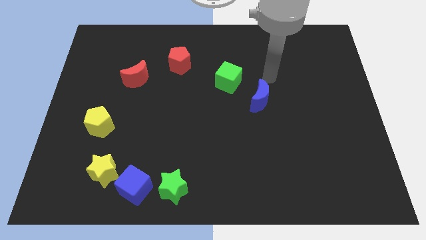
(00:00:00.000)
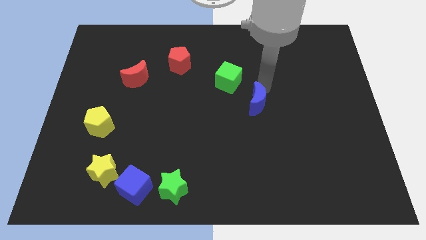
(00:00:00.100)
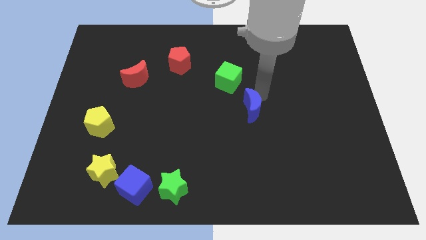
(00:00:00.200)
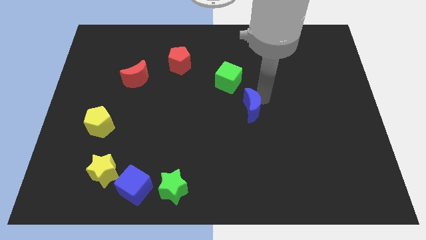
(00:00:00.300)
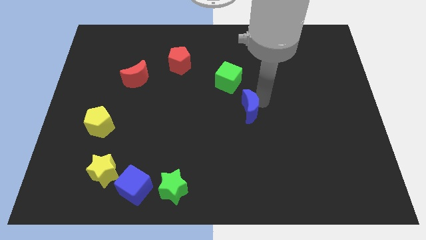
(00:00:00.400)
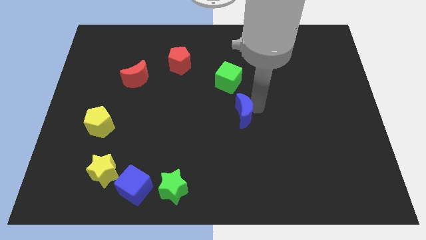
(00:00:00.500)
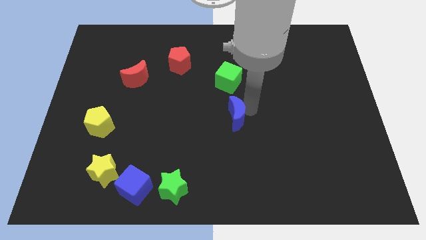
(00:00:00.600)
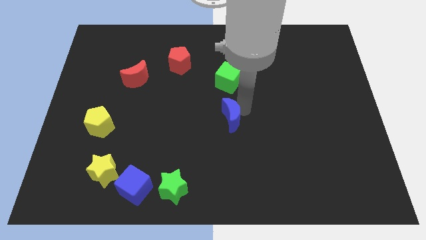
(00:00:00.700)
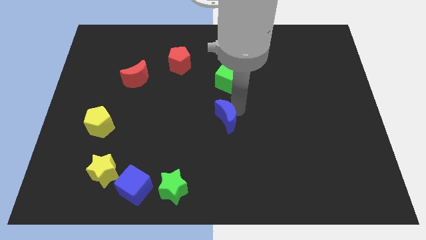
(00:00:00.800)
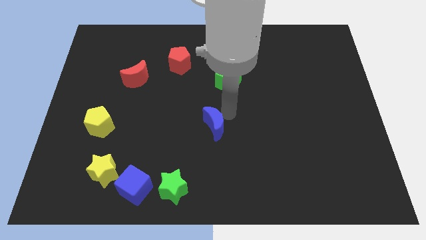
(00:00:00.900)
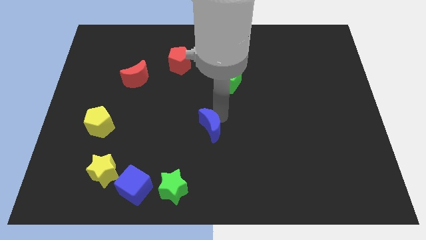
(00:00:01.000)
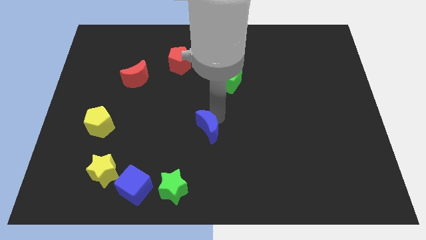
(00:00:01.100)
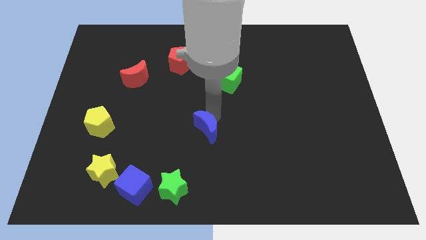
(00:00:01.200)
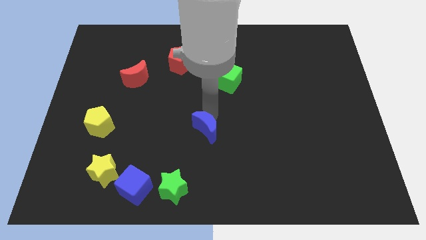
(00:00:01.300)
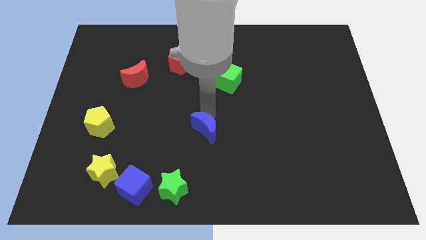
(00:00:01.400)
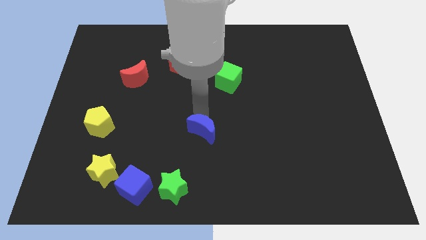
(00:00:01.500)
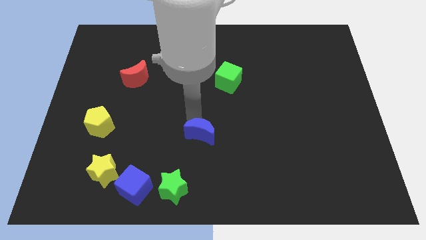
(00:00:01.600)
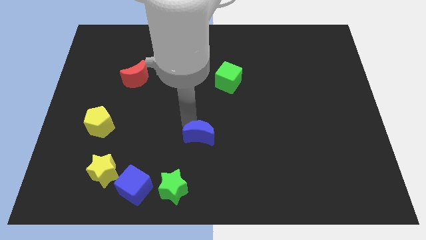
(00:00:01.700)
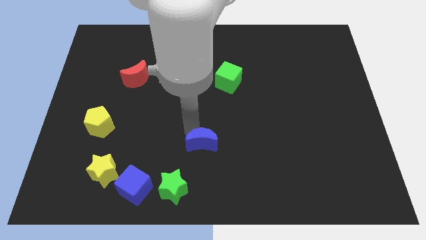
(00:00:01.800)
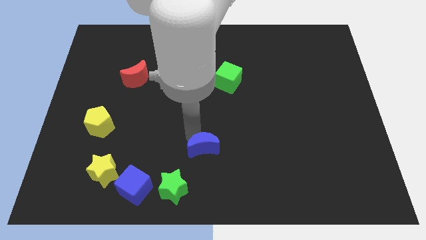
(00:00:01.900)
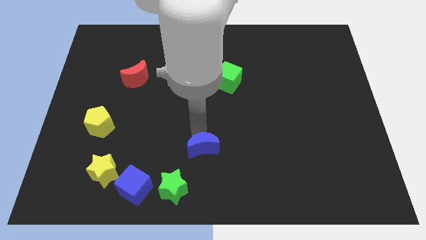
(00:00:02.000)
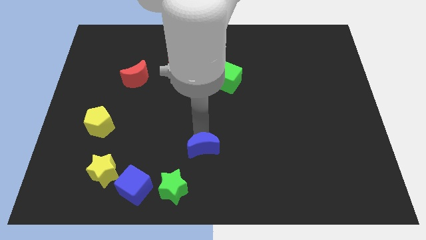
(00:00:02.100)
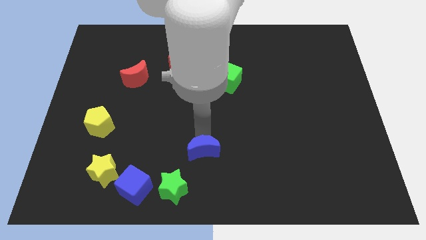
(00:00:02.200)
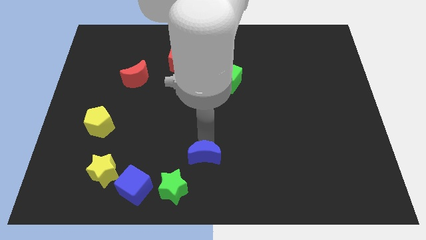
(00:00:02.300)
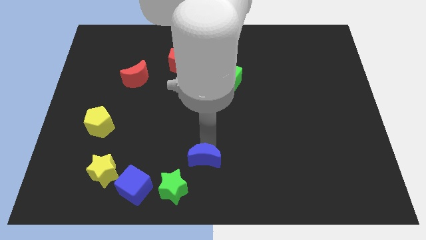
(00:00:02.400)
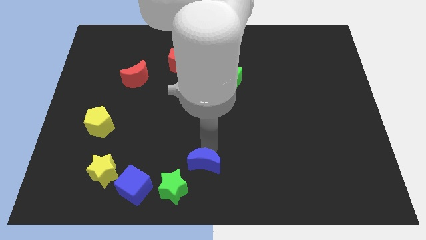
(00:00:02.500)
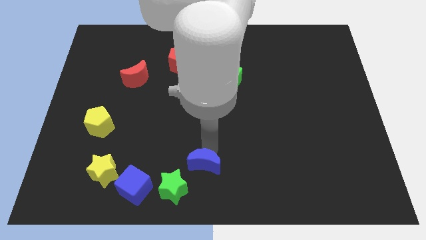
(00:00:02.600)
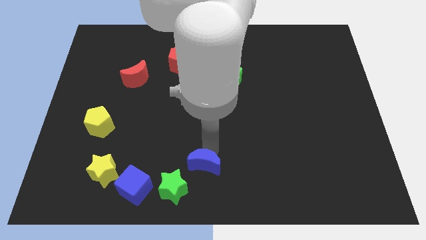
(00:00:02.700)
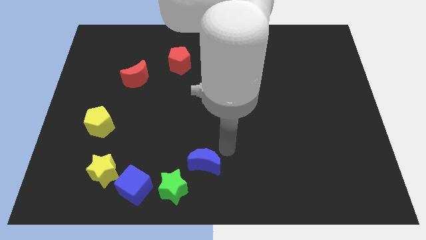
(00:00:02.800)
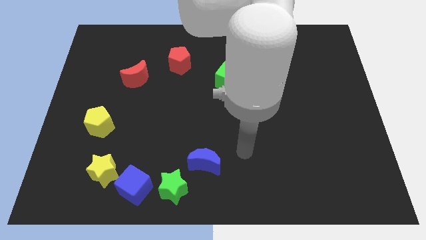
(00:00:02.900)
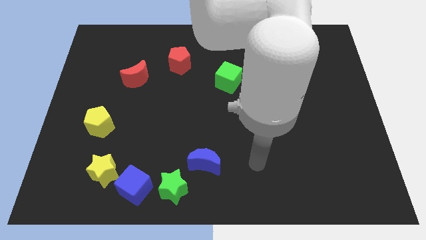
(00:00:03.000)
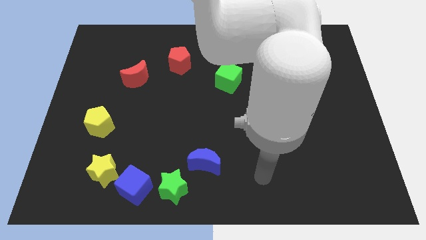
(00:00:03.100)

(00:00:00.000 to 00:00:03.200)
move the blue crescent at the top of the green star

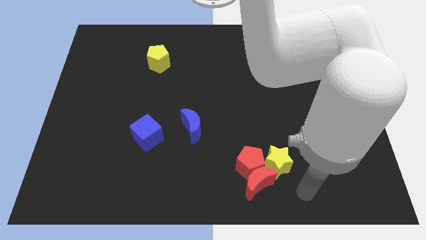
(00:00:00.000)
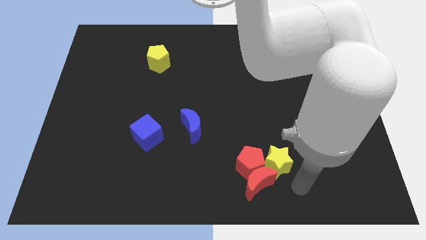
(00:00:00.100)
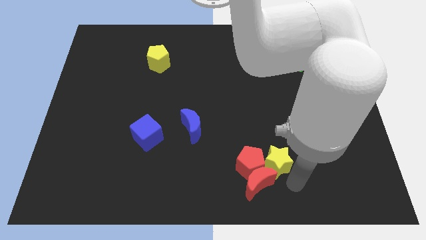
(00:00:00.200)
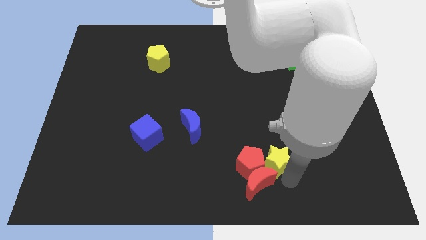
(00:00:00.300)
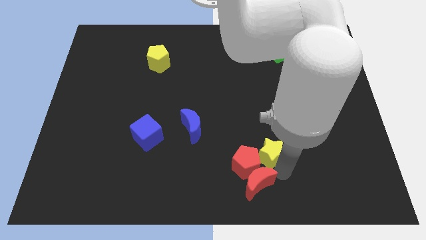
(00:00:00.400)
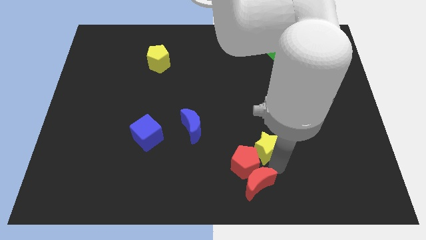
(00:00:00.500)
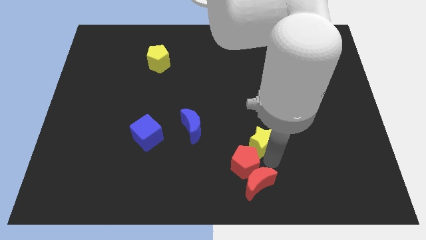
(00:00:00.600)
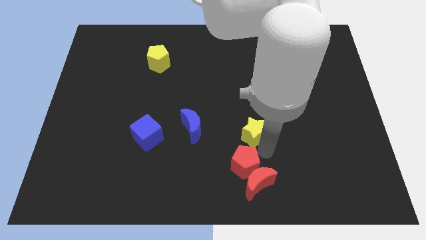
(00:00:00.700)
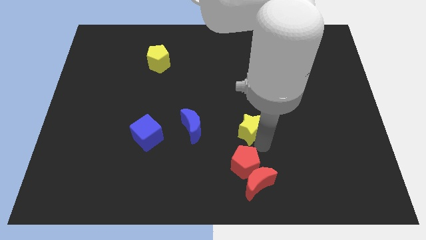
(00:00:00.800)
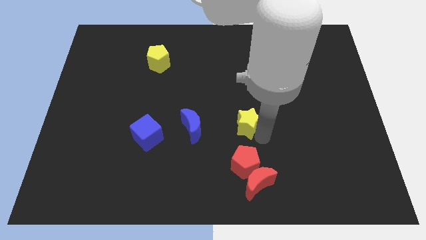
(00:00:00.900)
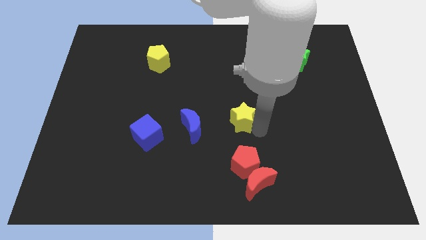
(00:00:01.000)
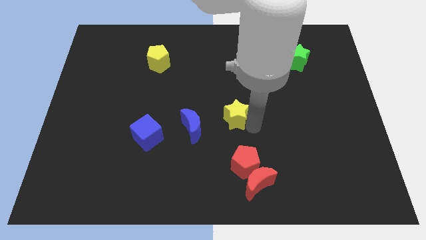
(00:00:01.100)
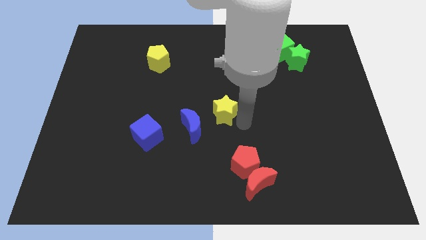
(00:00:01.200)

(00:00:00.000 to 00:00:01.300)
move the yellow star to the right side of the blue moon

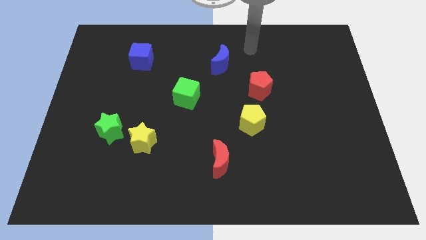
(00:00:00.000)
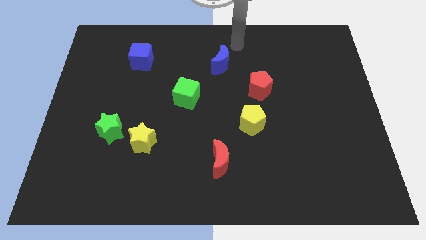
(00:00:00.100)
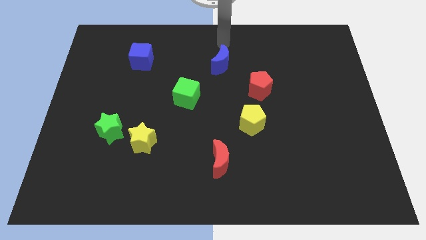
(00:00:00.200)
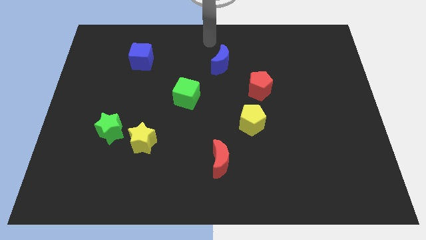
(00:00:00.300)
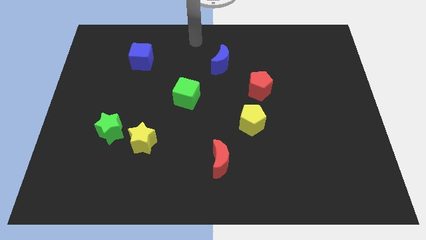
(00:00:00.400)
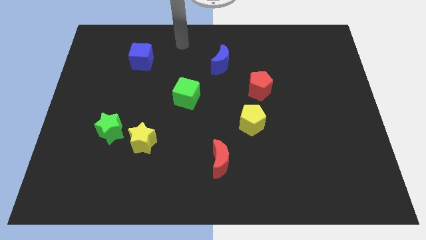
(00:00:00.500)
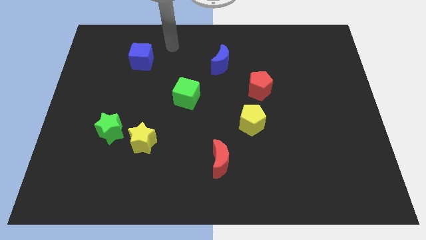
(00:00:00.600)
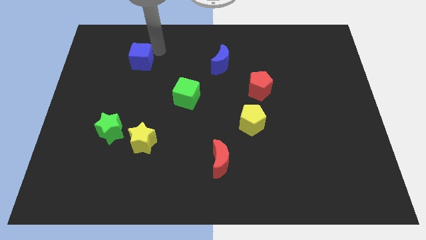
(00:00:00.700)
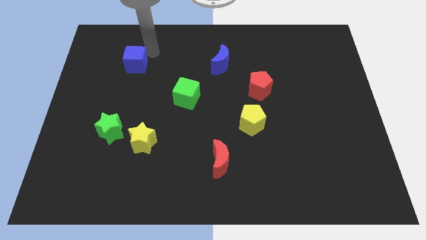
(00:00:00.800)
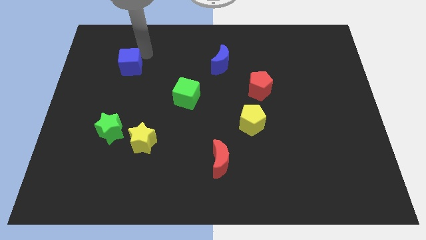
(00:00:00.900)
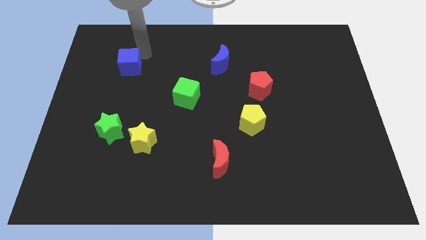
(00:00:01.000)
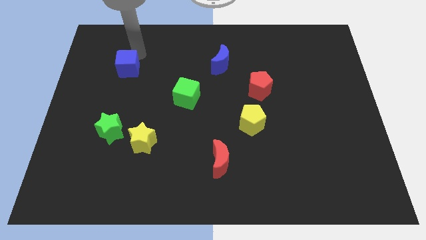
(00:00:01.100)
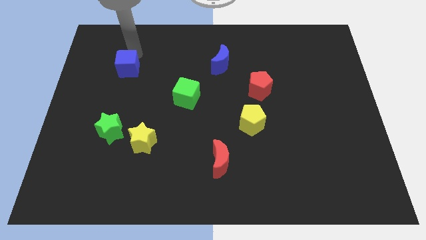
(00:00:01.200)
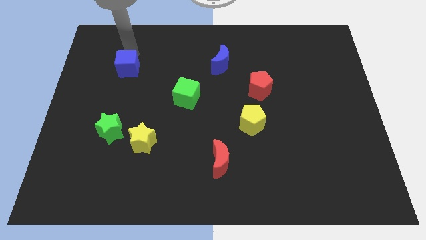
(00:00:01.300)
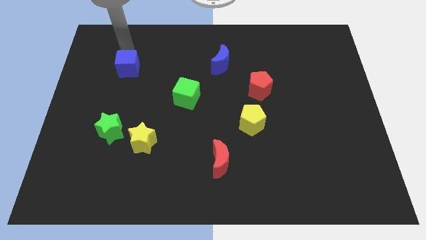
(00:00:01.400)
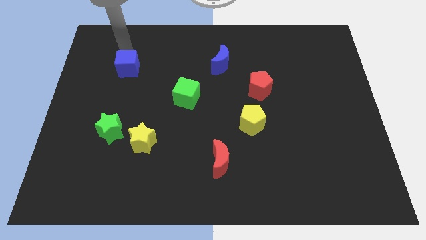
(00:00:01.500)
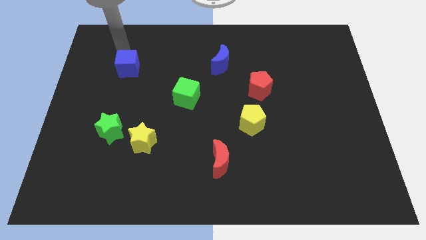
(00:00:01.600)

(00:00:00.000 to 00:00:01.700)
move arm above the blue cube

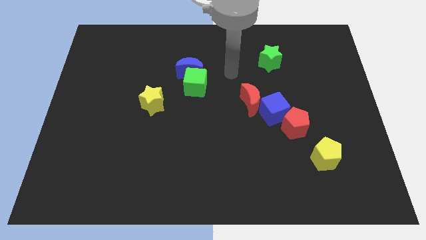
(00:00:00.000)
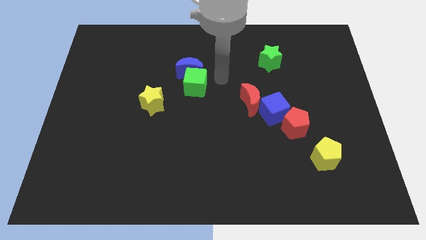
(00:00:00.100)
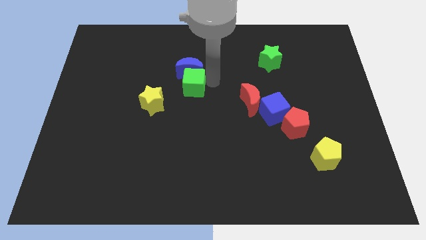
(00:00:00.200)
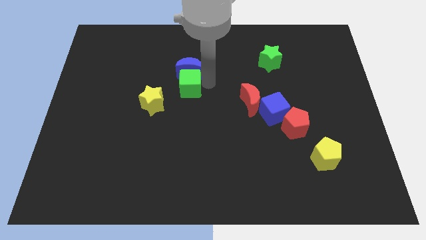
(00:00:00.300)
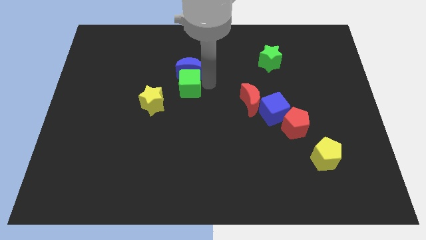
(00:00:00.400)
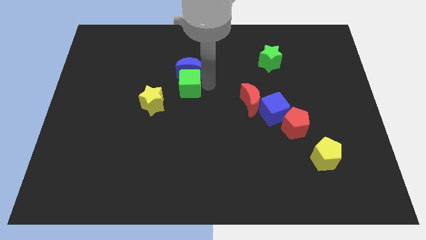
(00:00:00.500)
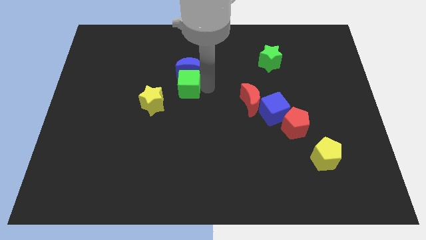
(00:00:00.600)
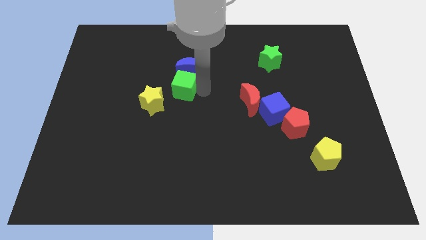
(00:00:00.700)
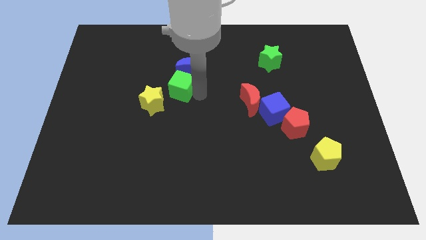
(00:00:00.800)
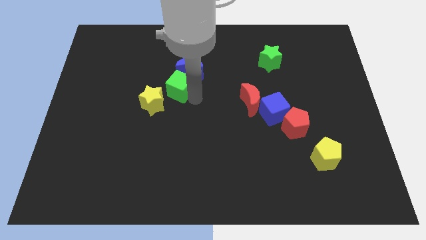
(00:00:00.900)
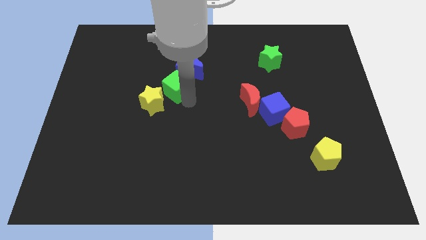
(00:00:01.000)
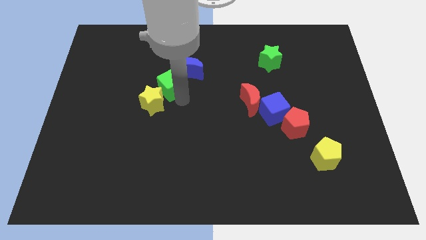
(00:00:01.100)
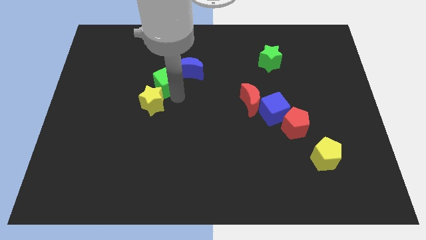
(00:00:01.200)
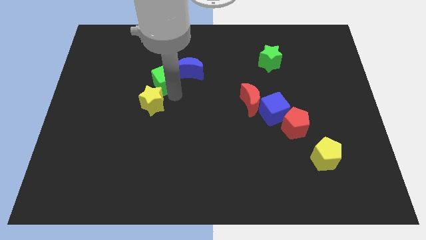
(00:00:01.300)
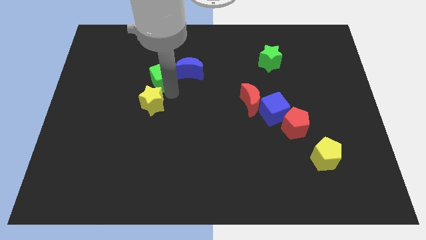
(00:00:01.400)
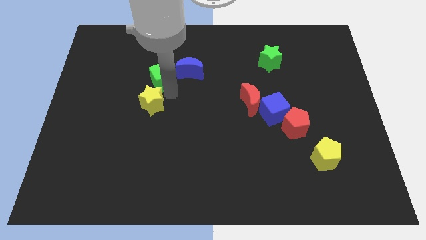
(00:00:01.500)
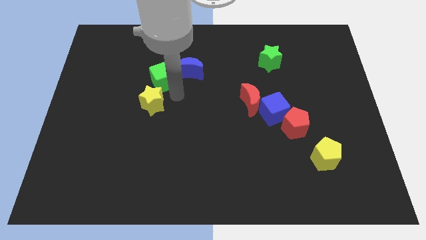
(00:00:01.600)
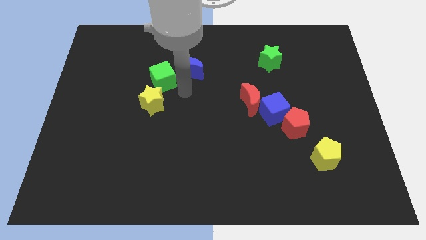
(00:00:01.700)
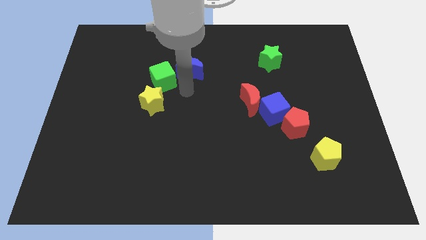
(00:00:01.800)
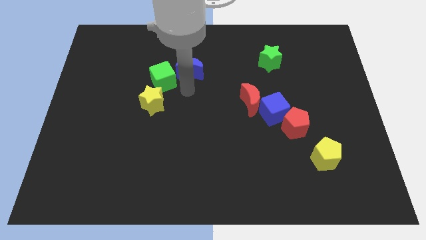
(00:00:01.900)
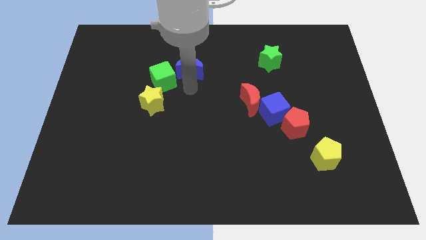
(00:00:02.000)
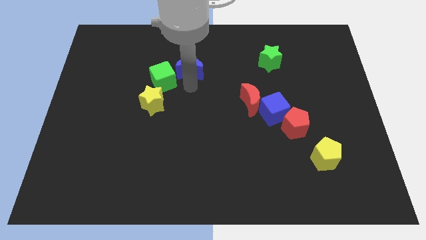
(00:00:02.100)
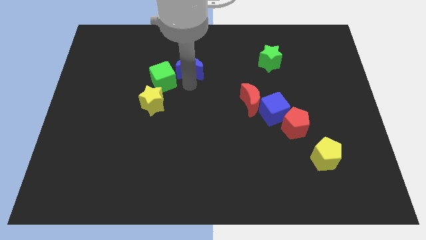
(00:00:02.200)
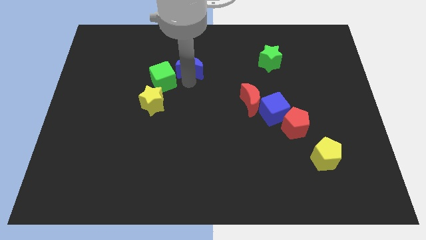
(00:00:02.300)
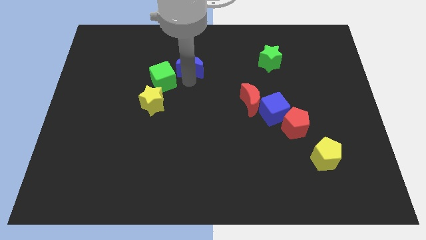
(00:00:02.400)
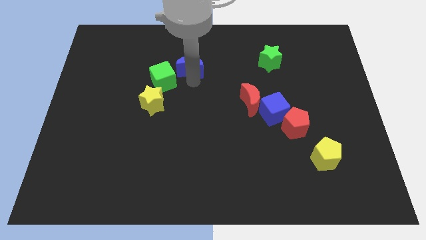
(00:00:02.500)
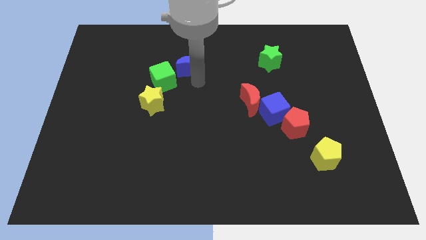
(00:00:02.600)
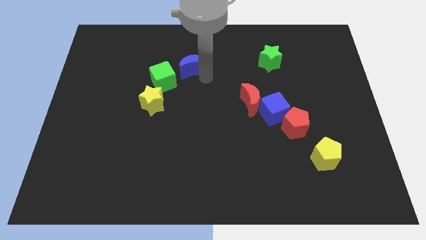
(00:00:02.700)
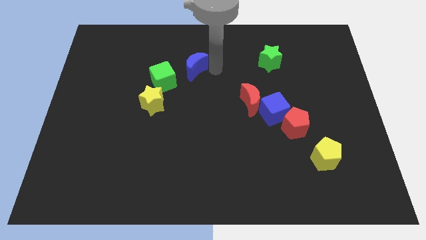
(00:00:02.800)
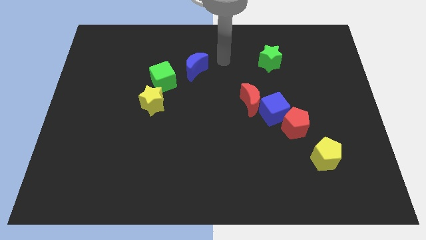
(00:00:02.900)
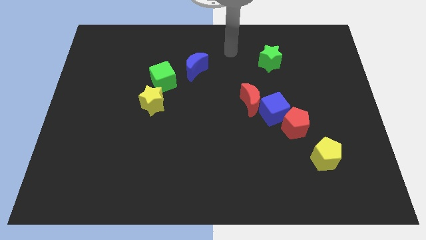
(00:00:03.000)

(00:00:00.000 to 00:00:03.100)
separate the green cube from the blue moon
